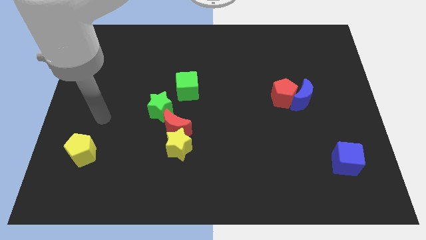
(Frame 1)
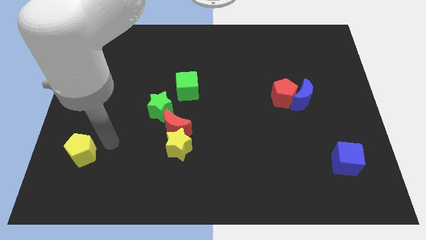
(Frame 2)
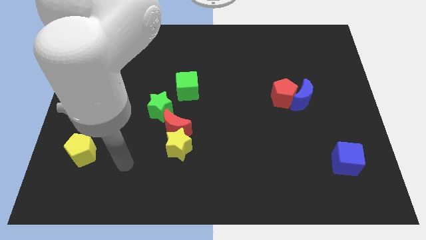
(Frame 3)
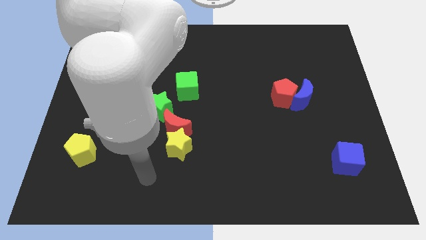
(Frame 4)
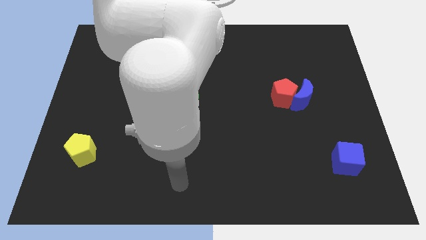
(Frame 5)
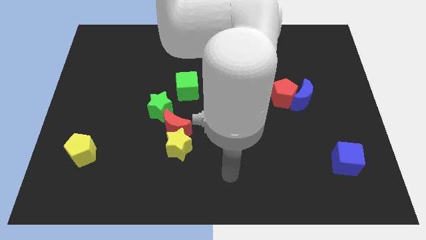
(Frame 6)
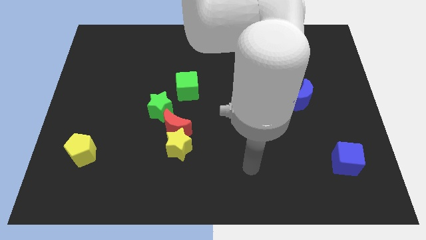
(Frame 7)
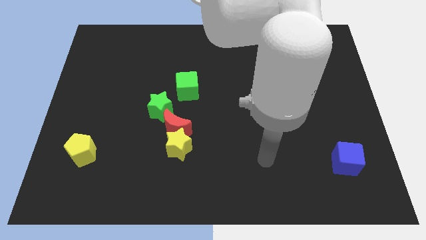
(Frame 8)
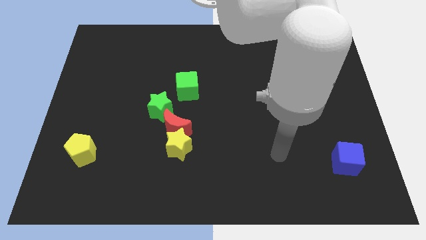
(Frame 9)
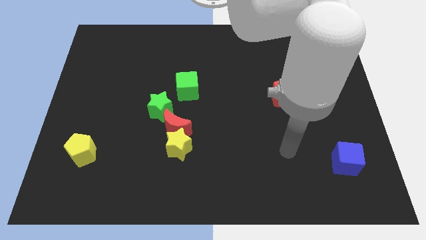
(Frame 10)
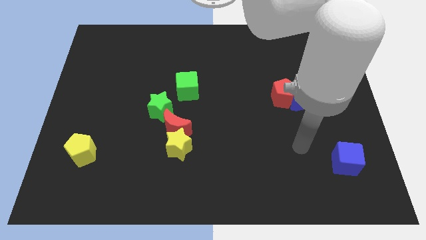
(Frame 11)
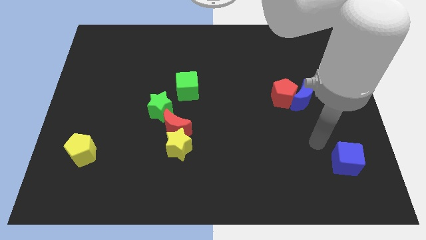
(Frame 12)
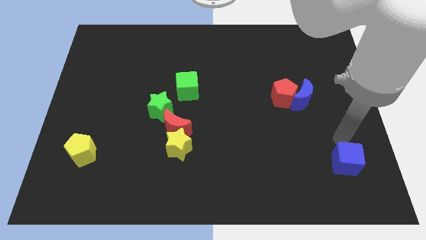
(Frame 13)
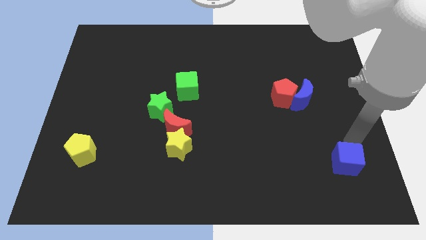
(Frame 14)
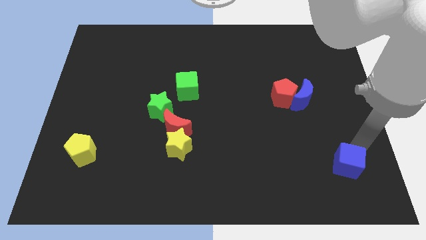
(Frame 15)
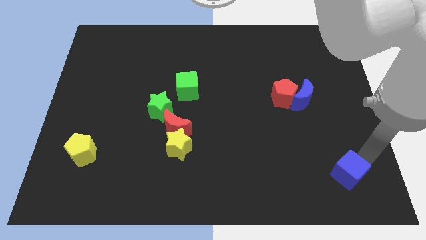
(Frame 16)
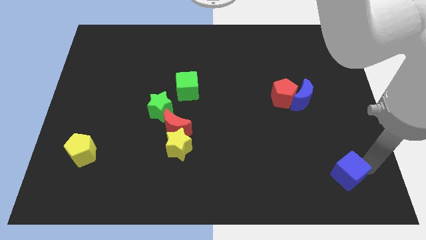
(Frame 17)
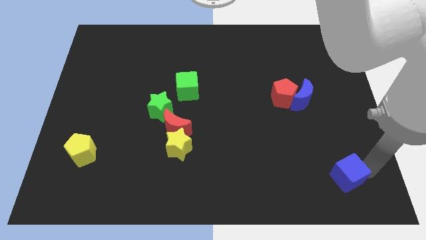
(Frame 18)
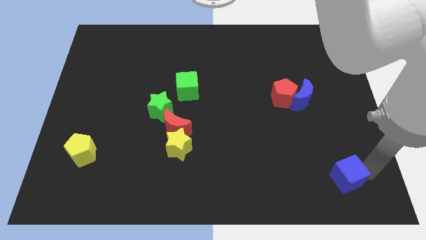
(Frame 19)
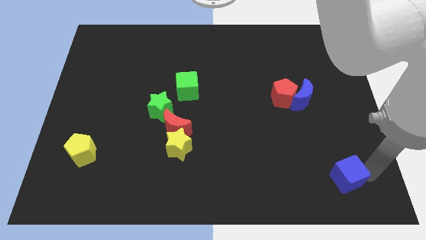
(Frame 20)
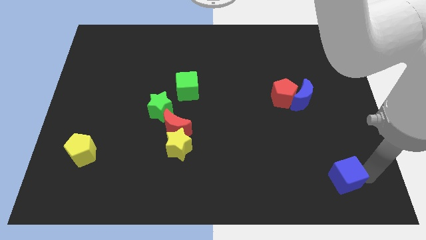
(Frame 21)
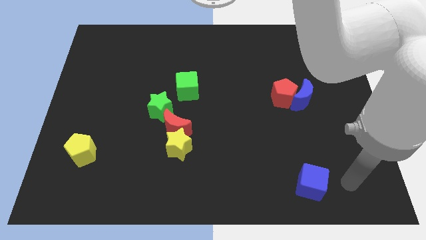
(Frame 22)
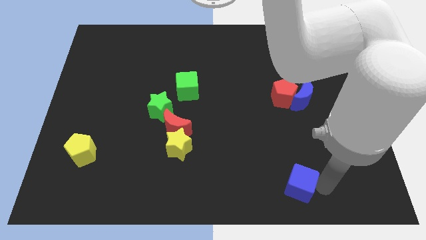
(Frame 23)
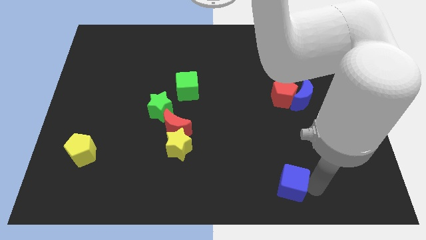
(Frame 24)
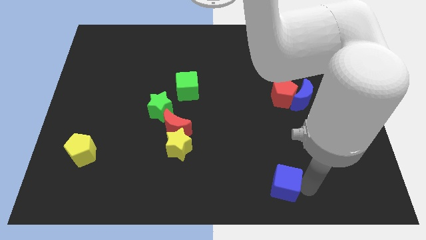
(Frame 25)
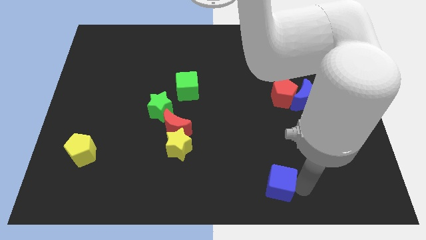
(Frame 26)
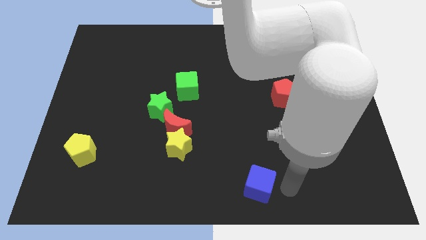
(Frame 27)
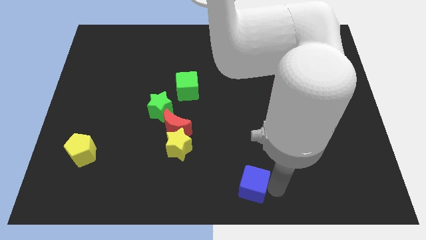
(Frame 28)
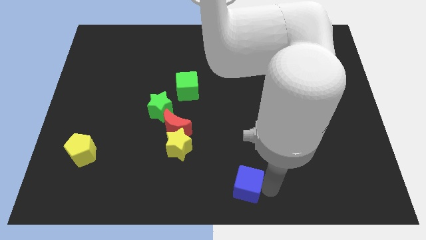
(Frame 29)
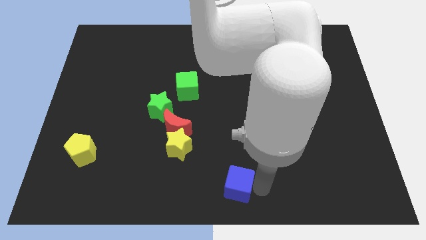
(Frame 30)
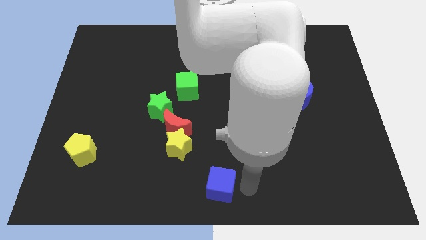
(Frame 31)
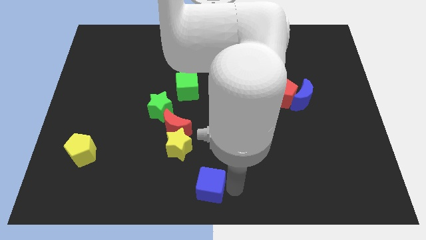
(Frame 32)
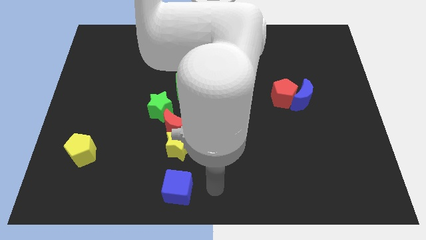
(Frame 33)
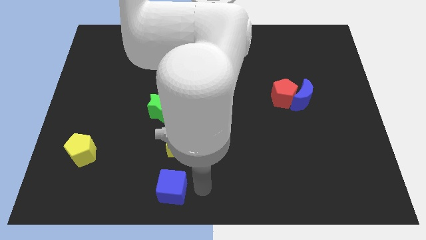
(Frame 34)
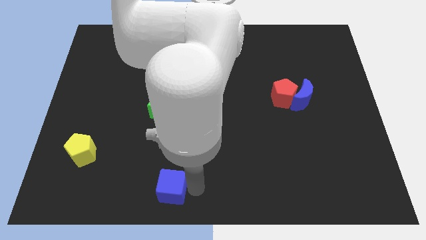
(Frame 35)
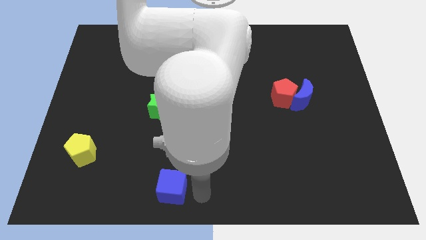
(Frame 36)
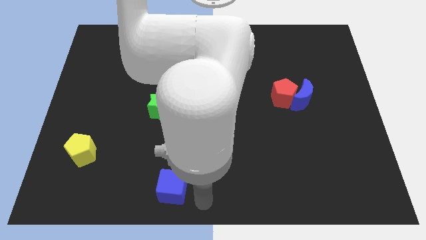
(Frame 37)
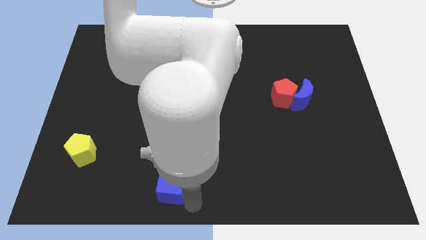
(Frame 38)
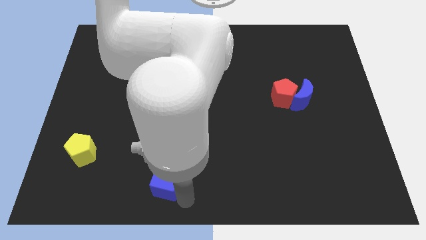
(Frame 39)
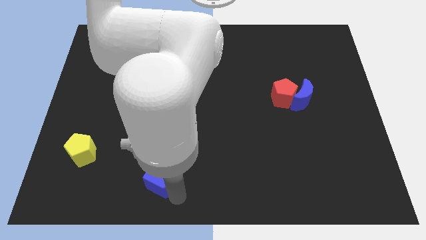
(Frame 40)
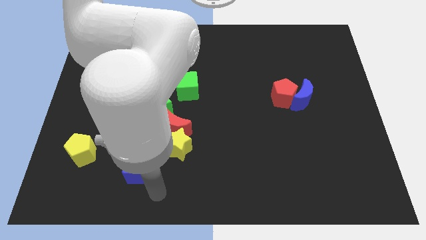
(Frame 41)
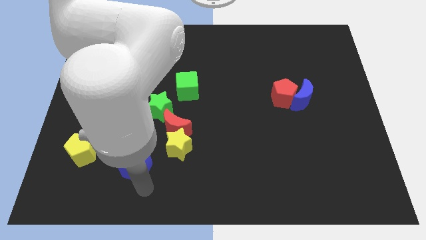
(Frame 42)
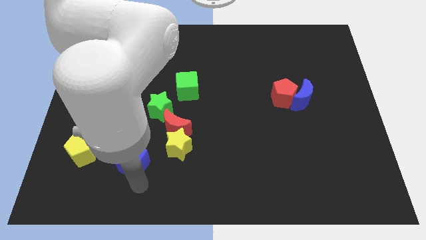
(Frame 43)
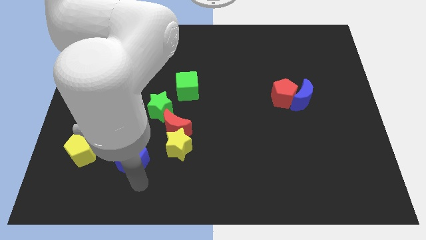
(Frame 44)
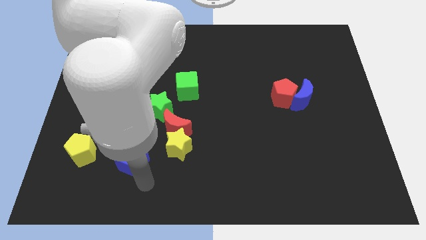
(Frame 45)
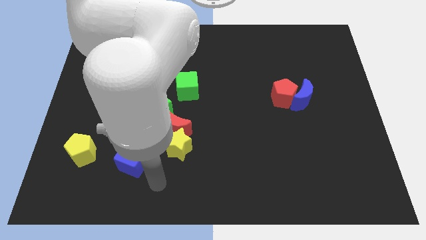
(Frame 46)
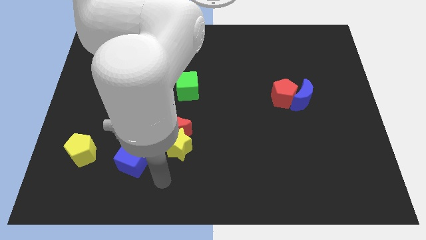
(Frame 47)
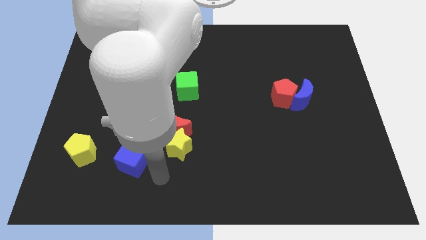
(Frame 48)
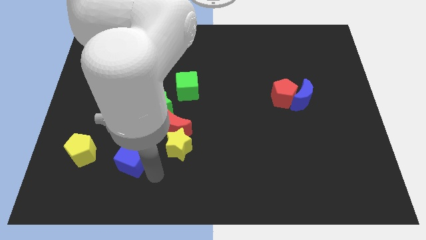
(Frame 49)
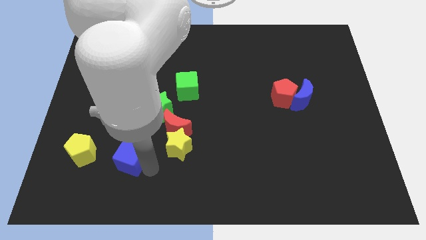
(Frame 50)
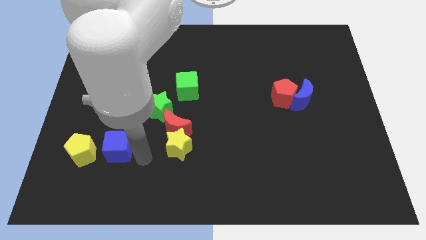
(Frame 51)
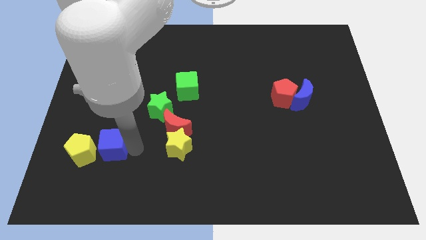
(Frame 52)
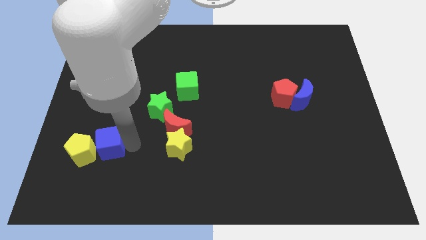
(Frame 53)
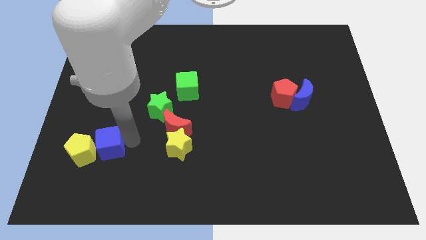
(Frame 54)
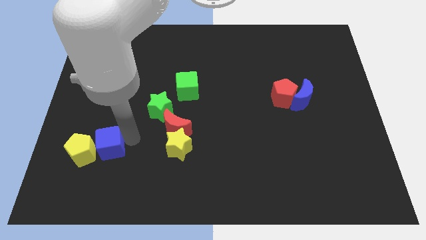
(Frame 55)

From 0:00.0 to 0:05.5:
slide the blue cube to the yellow pentagon

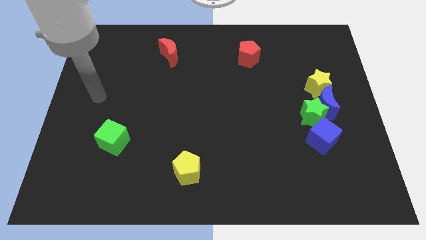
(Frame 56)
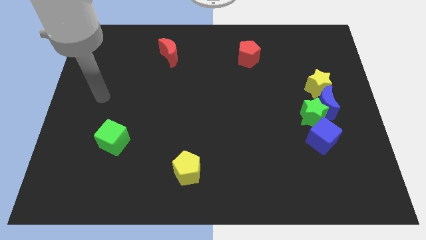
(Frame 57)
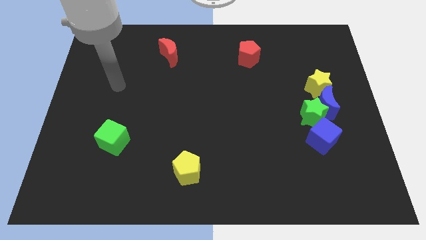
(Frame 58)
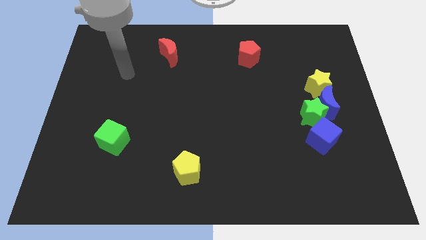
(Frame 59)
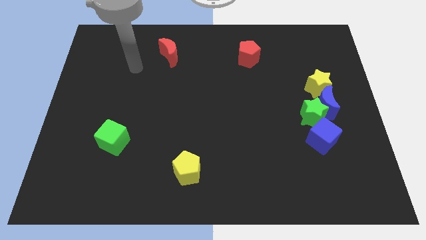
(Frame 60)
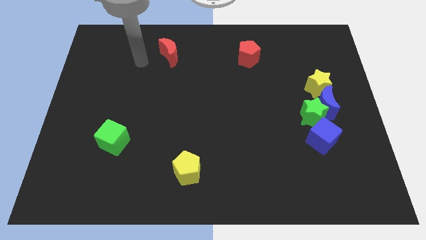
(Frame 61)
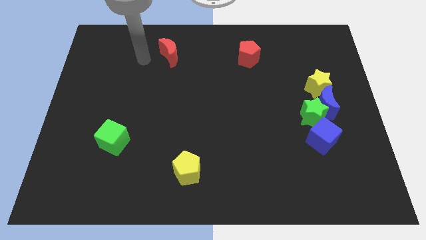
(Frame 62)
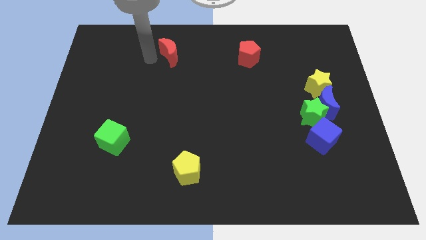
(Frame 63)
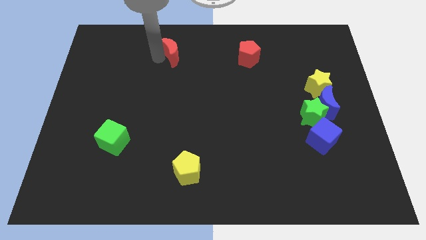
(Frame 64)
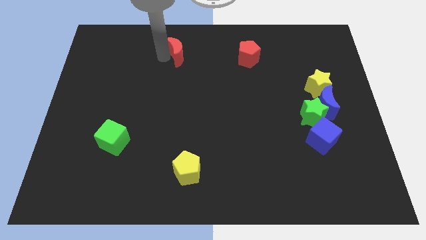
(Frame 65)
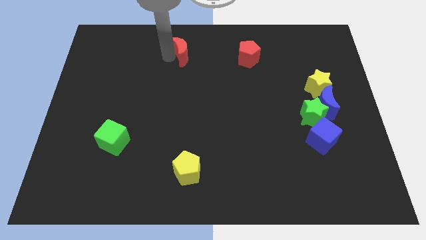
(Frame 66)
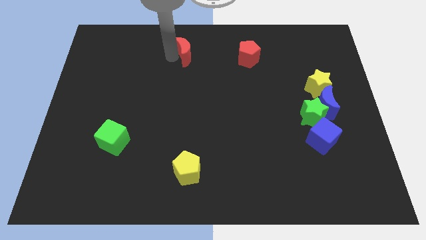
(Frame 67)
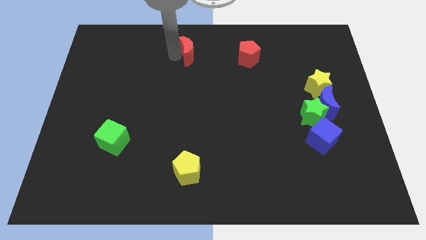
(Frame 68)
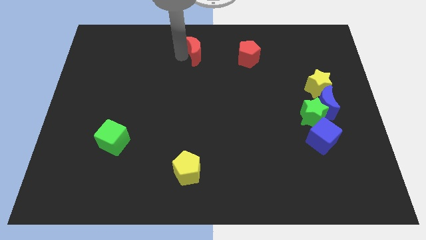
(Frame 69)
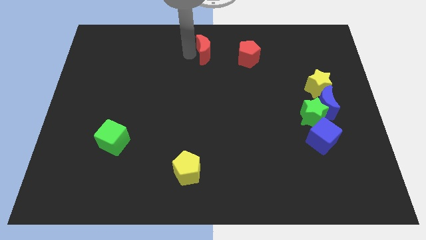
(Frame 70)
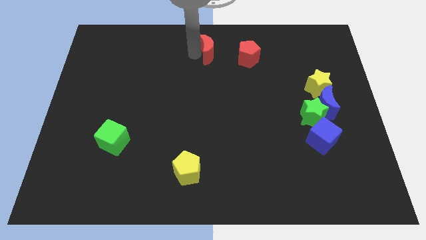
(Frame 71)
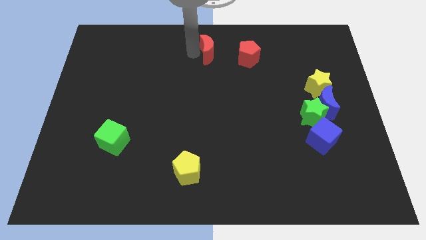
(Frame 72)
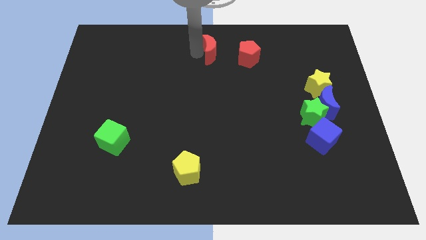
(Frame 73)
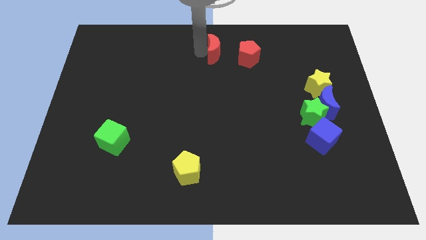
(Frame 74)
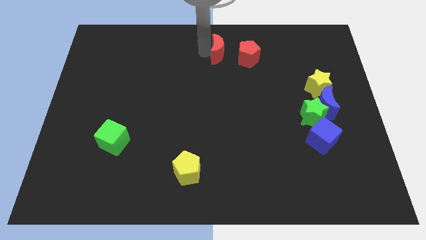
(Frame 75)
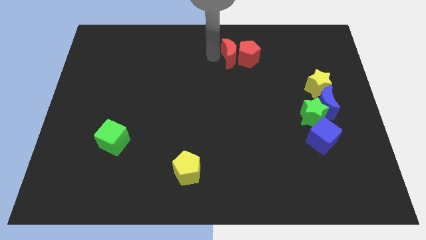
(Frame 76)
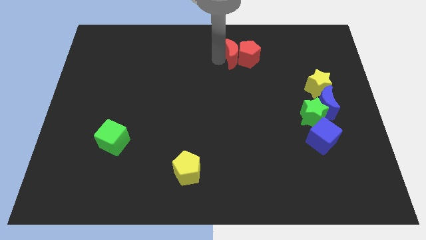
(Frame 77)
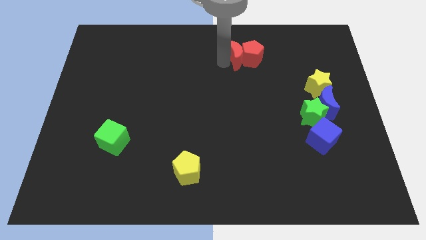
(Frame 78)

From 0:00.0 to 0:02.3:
put the red moon to the red pentagon

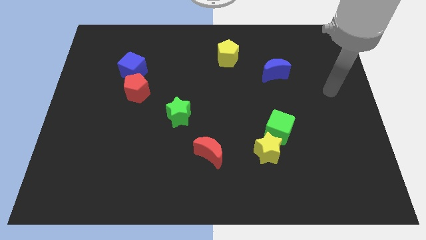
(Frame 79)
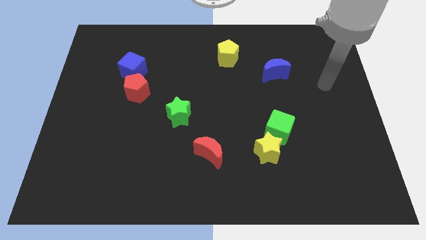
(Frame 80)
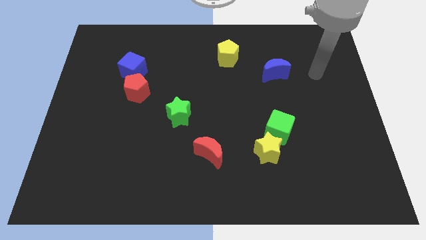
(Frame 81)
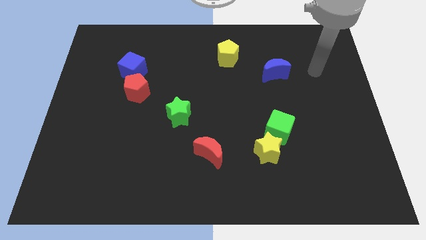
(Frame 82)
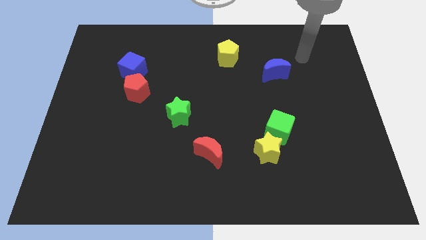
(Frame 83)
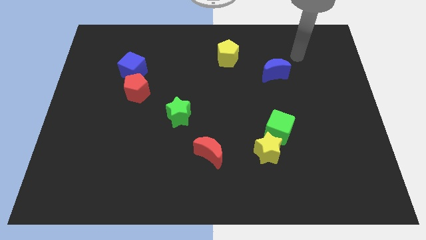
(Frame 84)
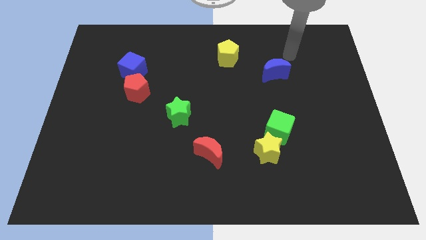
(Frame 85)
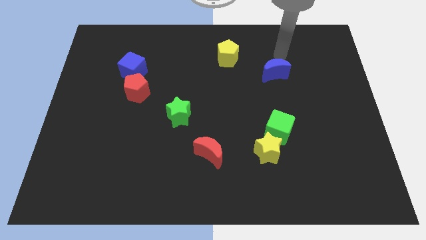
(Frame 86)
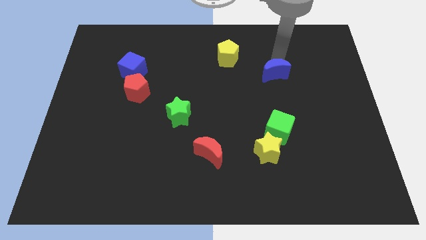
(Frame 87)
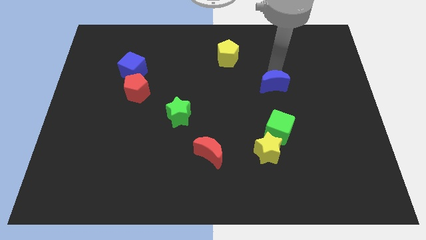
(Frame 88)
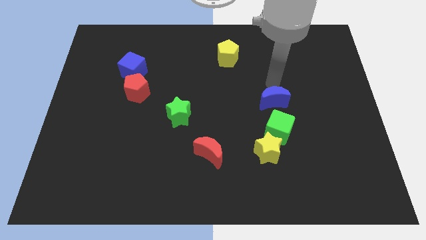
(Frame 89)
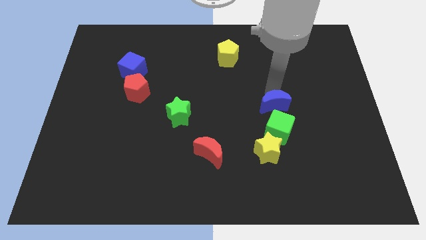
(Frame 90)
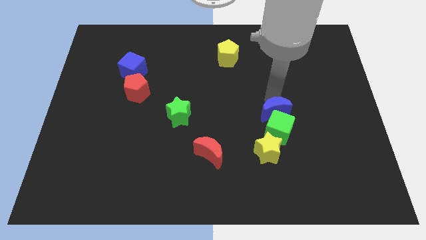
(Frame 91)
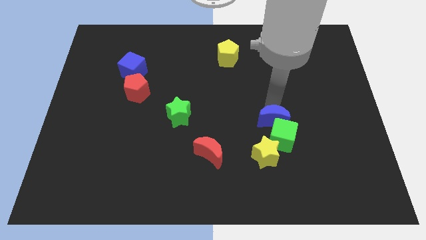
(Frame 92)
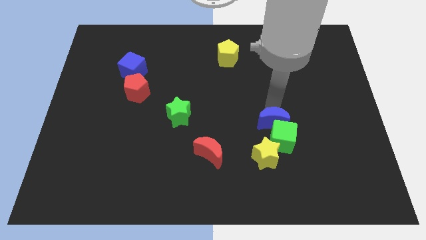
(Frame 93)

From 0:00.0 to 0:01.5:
move the blue moon close to the green cube
